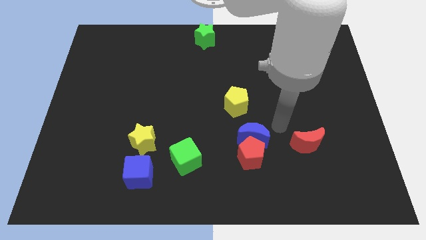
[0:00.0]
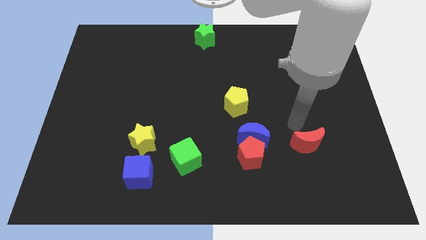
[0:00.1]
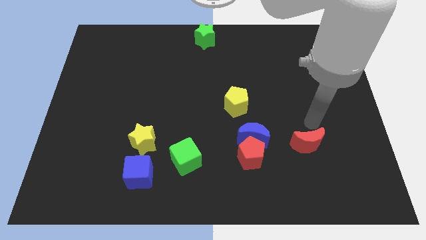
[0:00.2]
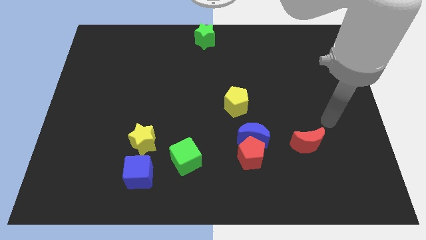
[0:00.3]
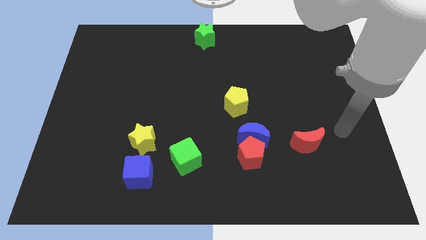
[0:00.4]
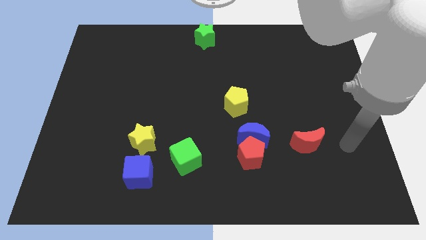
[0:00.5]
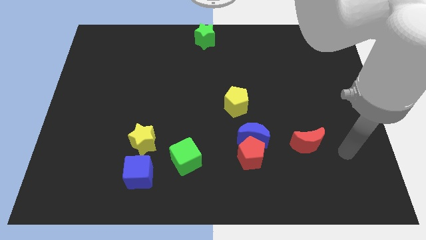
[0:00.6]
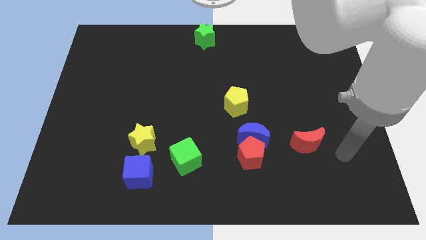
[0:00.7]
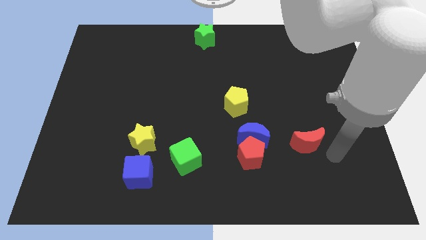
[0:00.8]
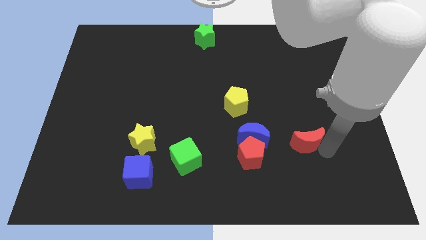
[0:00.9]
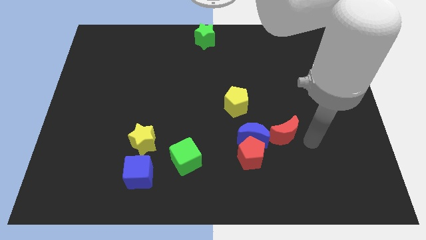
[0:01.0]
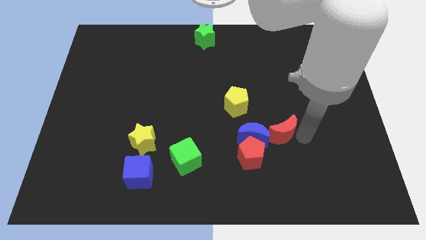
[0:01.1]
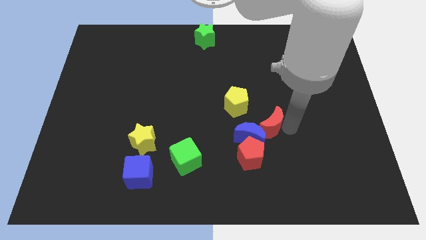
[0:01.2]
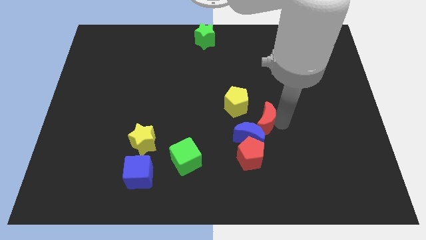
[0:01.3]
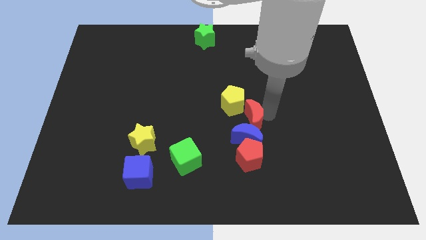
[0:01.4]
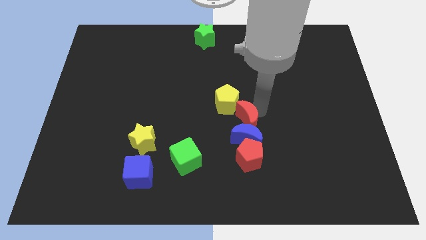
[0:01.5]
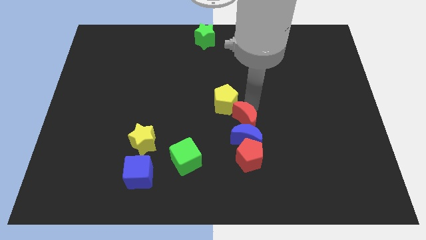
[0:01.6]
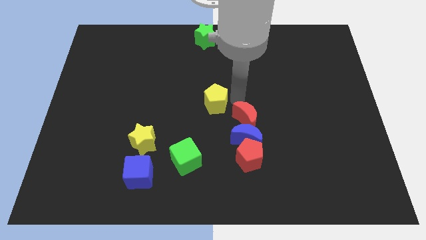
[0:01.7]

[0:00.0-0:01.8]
push the red crescent to the top of the blue crescent

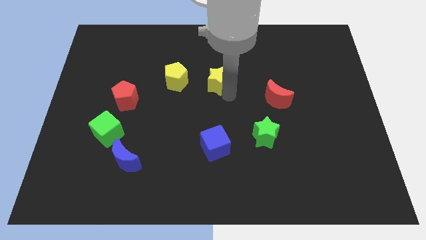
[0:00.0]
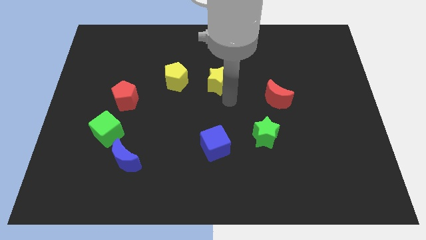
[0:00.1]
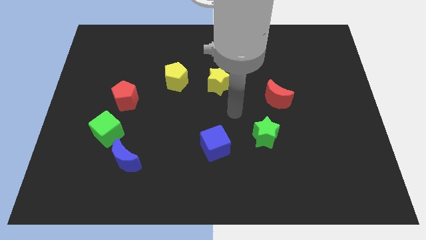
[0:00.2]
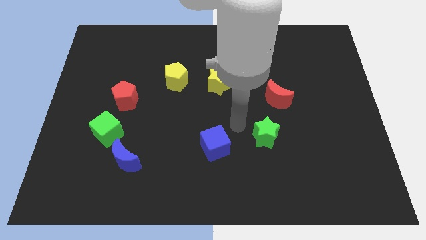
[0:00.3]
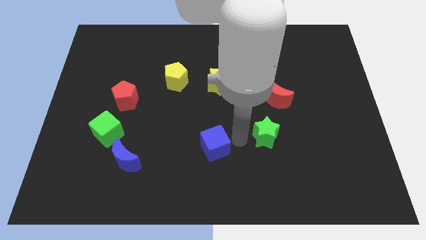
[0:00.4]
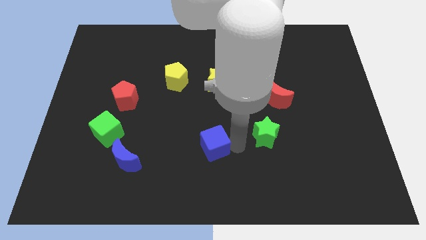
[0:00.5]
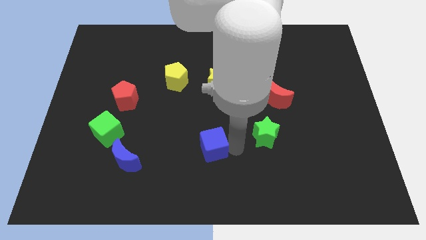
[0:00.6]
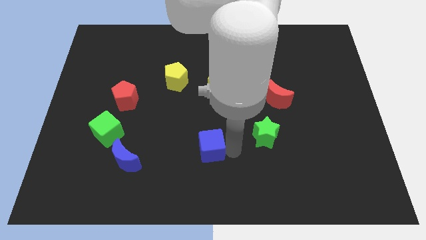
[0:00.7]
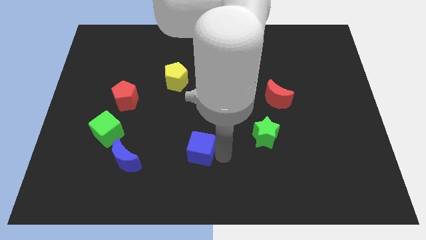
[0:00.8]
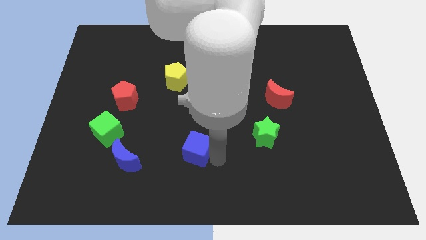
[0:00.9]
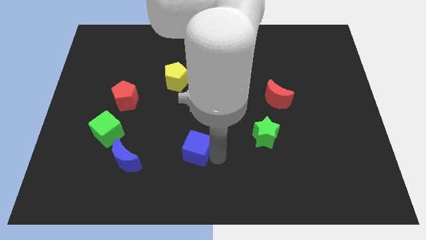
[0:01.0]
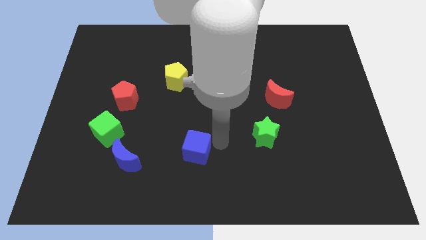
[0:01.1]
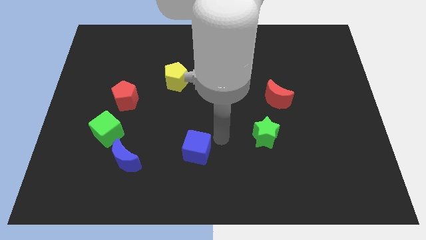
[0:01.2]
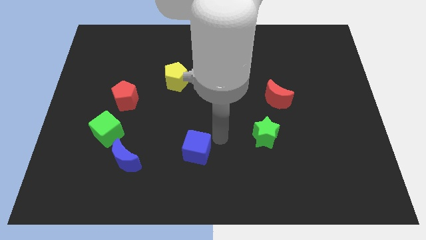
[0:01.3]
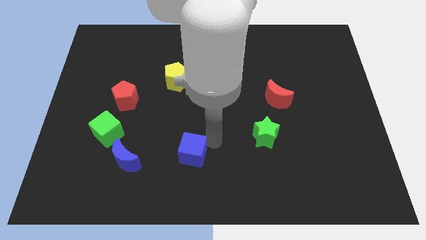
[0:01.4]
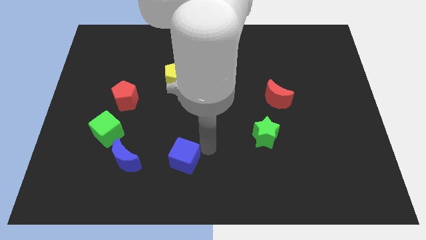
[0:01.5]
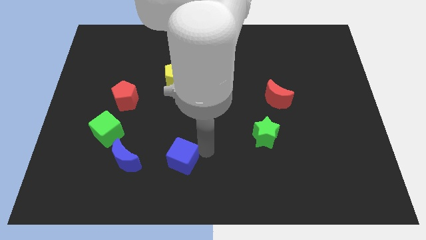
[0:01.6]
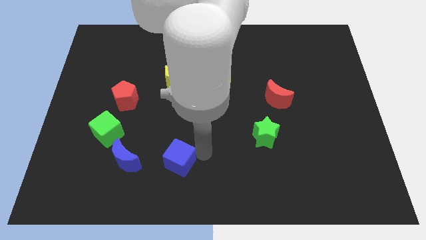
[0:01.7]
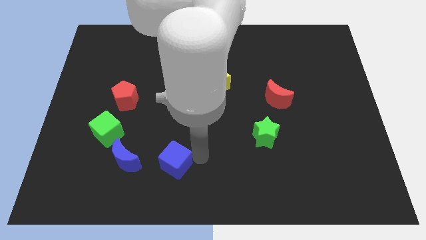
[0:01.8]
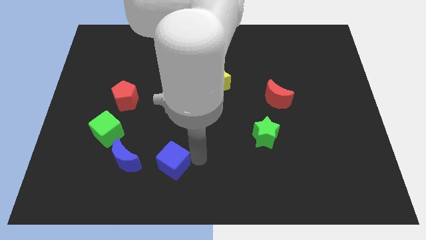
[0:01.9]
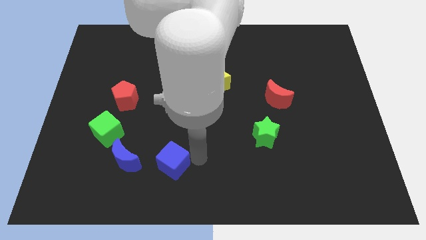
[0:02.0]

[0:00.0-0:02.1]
move blue cube towards blue moon

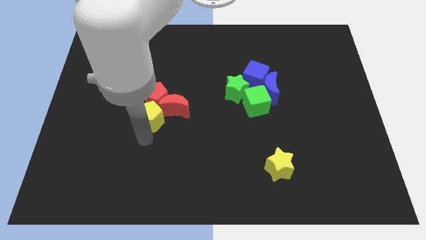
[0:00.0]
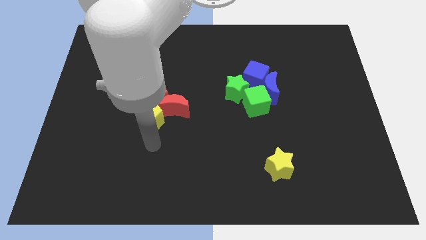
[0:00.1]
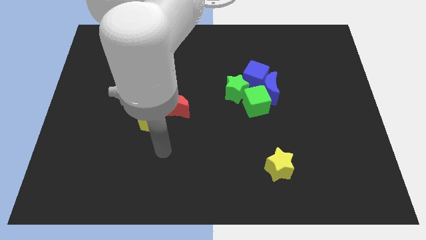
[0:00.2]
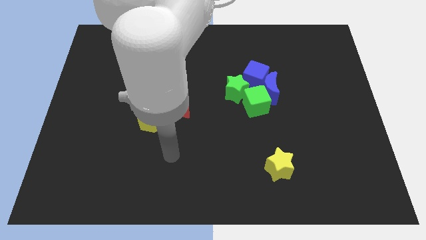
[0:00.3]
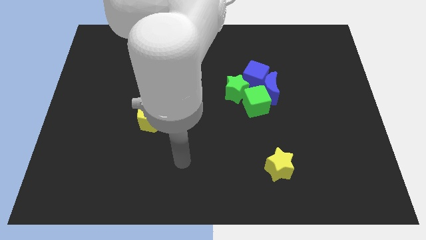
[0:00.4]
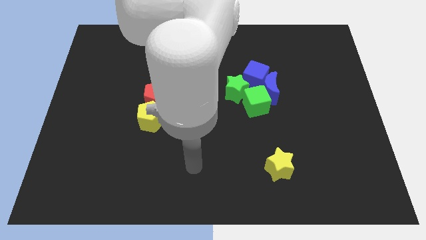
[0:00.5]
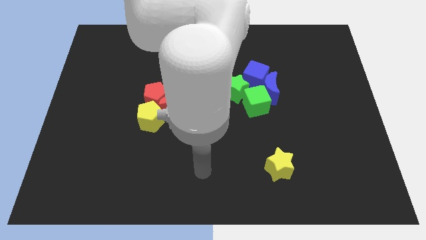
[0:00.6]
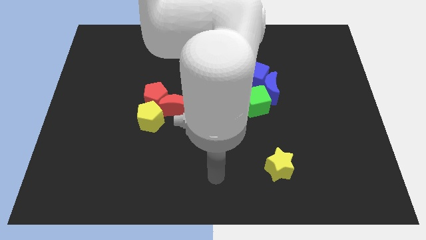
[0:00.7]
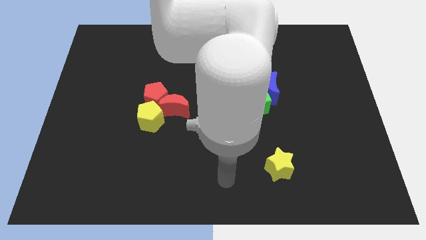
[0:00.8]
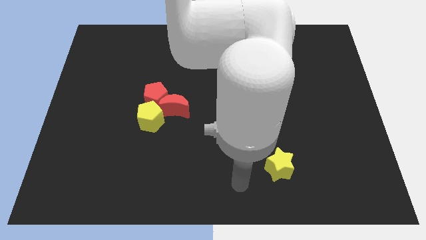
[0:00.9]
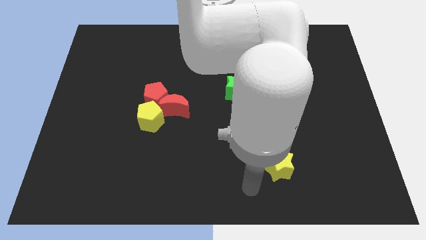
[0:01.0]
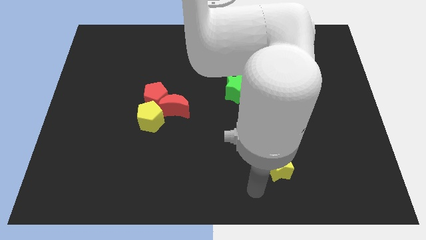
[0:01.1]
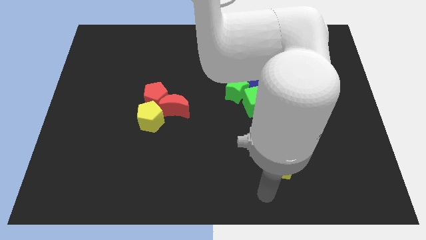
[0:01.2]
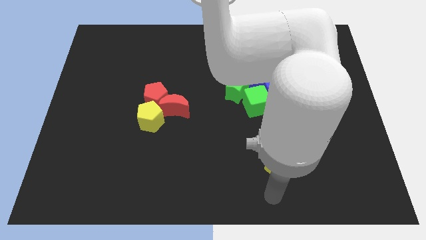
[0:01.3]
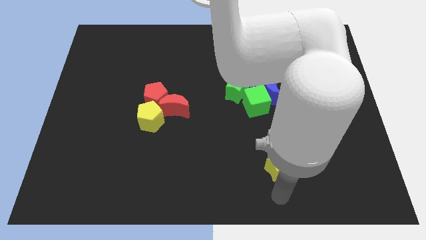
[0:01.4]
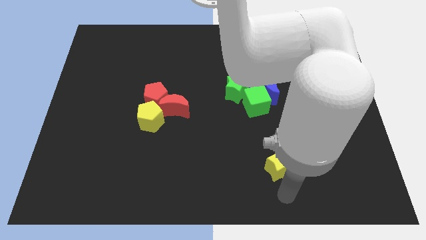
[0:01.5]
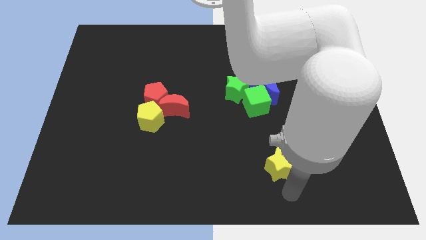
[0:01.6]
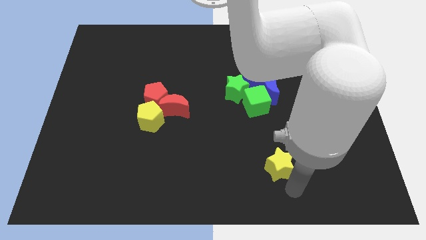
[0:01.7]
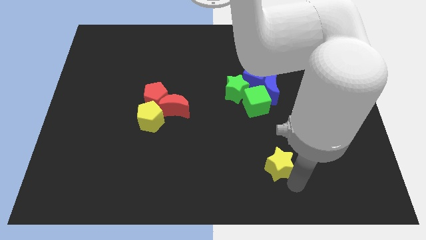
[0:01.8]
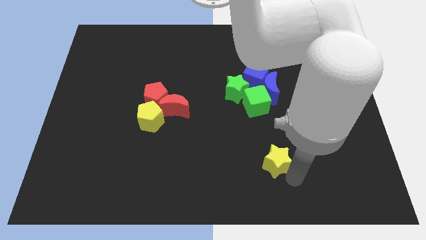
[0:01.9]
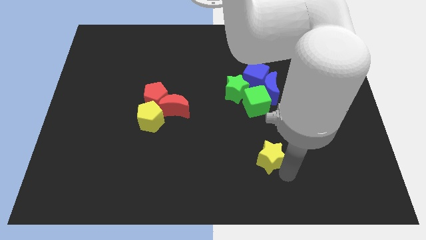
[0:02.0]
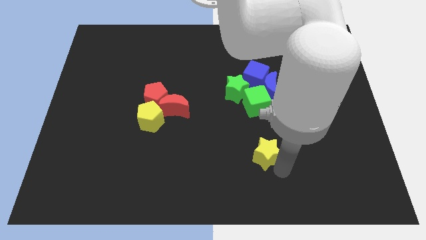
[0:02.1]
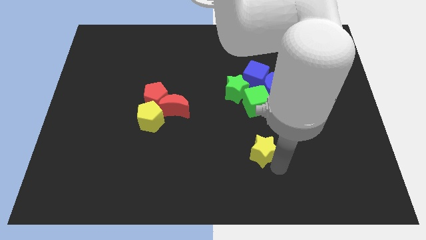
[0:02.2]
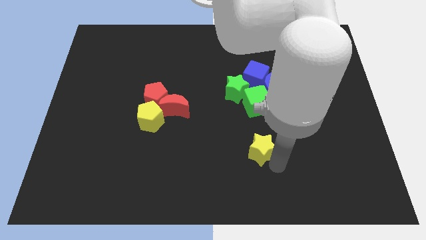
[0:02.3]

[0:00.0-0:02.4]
move the yellow star towards the center of the board

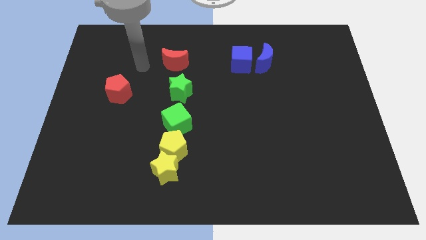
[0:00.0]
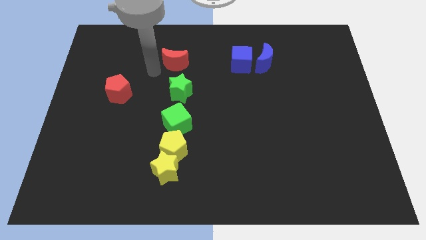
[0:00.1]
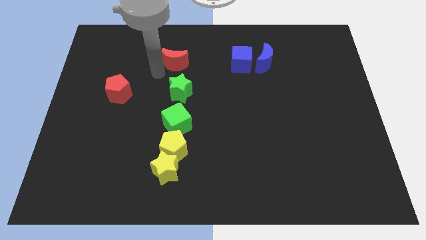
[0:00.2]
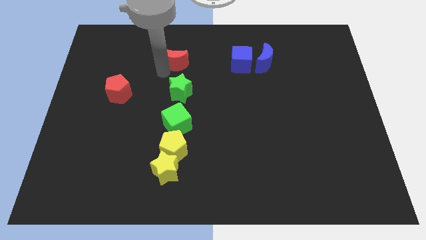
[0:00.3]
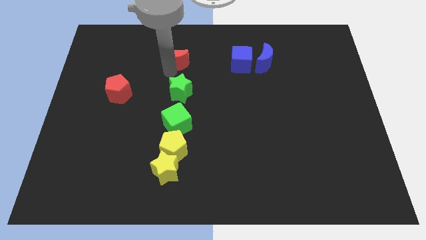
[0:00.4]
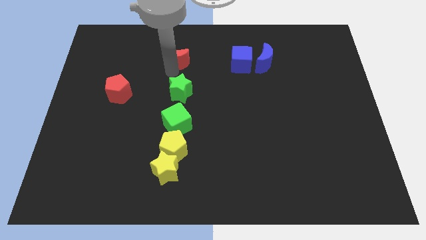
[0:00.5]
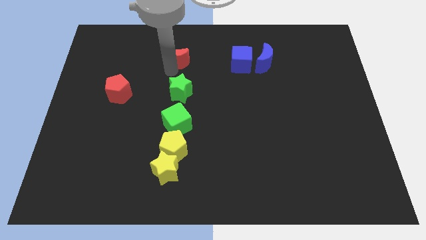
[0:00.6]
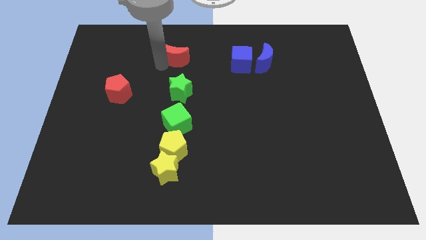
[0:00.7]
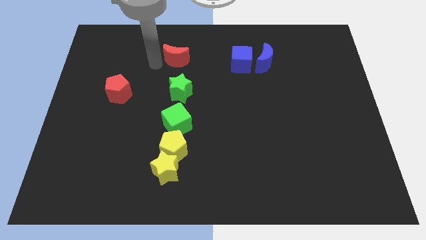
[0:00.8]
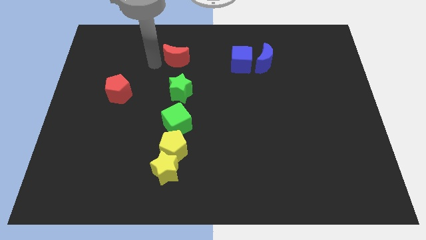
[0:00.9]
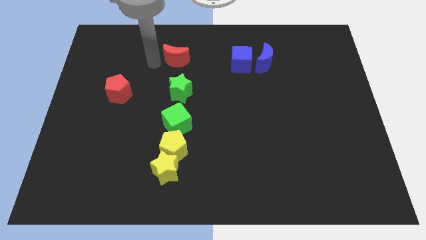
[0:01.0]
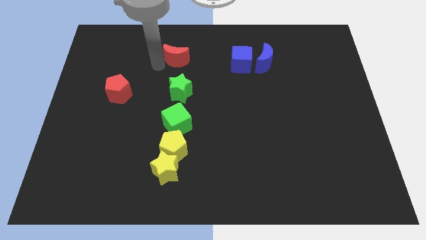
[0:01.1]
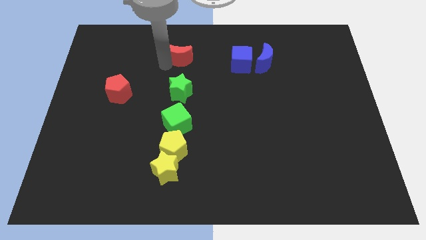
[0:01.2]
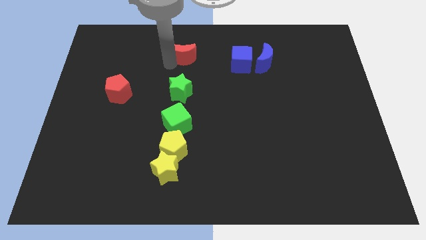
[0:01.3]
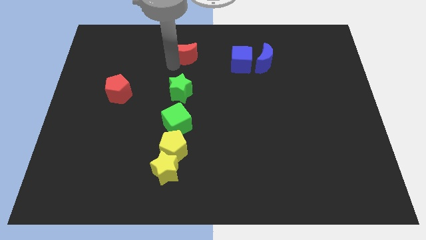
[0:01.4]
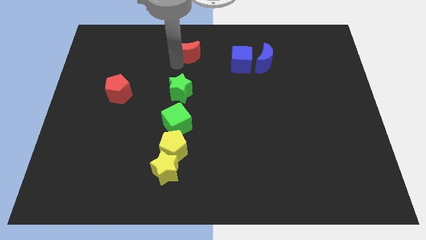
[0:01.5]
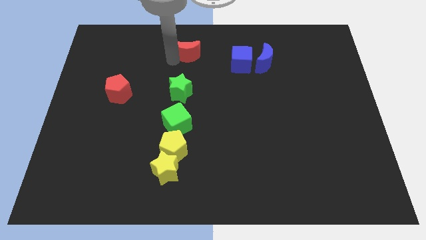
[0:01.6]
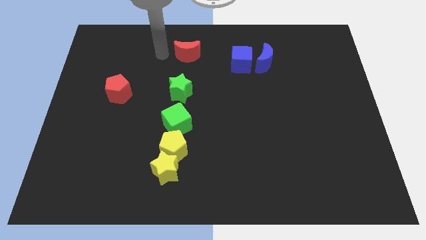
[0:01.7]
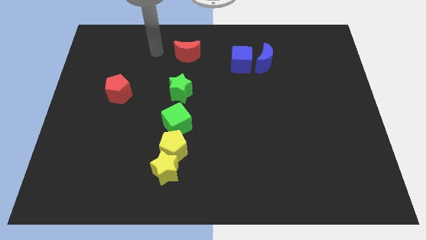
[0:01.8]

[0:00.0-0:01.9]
put the red crescent to the top side of the green star

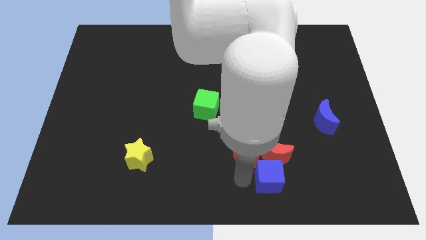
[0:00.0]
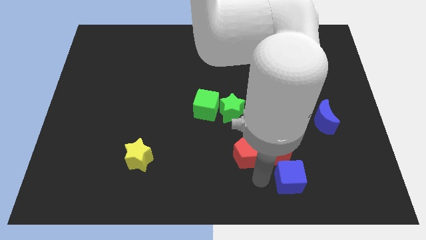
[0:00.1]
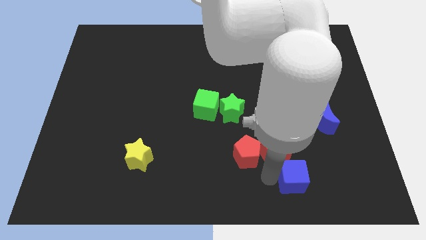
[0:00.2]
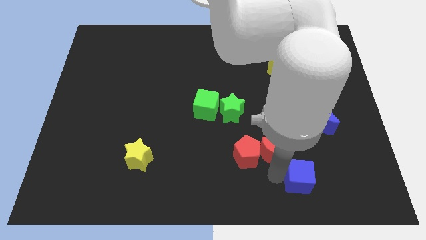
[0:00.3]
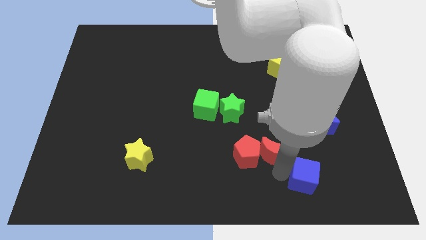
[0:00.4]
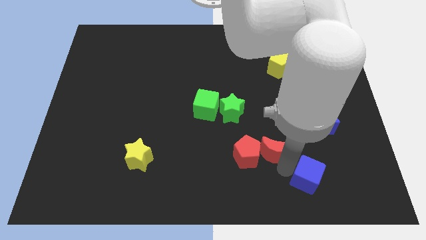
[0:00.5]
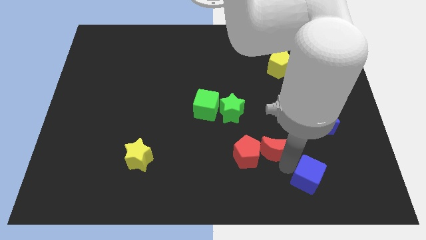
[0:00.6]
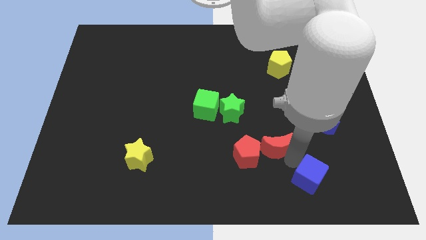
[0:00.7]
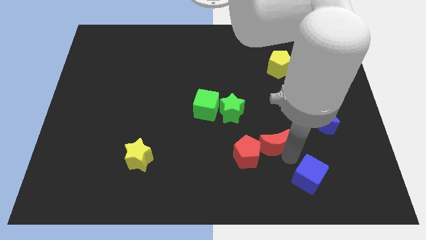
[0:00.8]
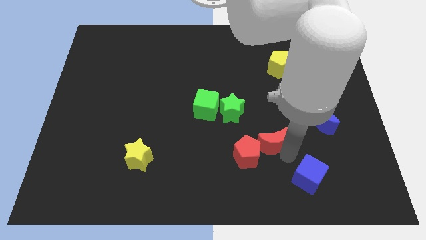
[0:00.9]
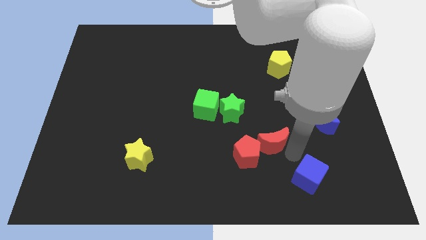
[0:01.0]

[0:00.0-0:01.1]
separate red moon and blue cube
